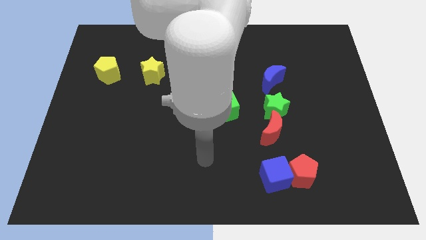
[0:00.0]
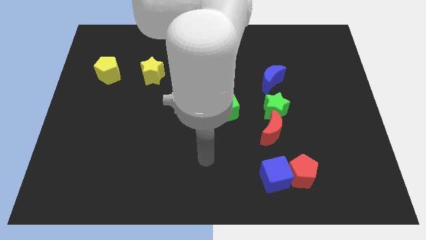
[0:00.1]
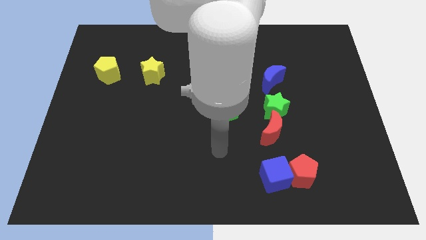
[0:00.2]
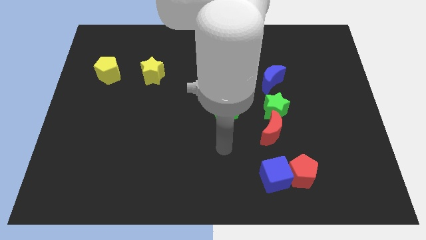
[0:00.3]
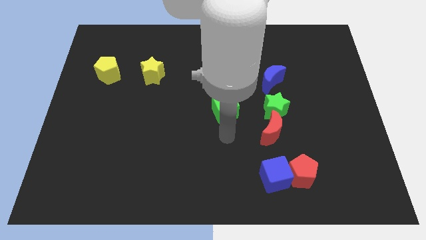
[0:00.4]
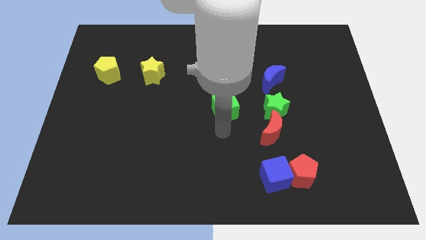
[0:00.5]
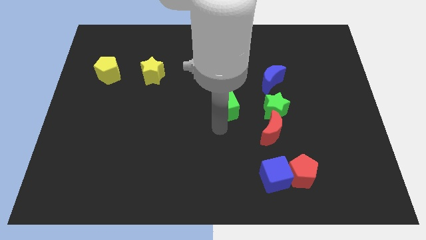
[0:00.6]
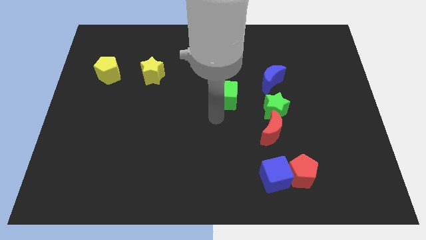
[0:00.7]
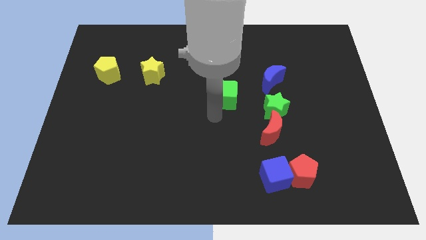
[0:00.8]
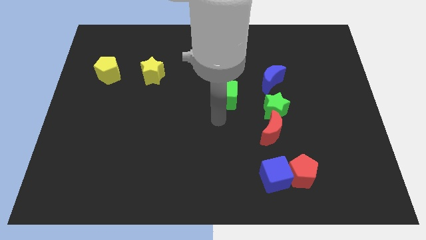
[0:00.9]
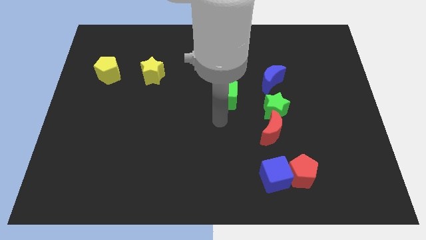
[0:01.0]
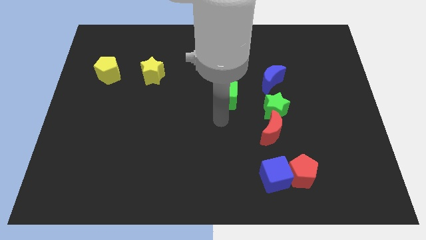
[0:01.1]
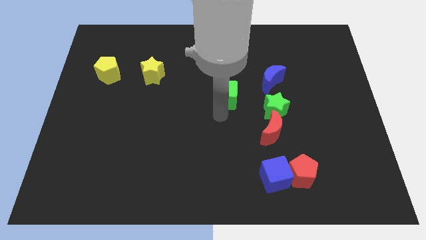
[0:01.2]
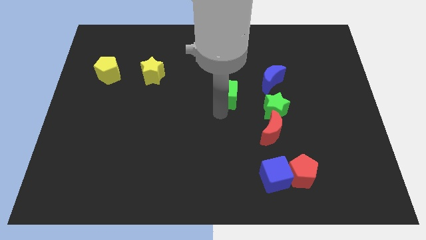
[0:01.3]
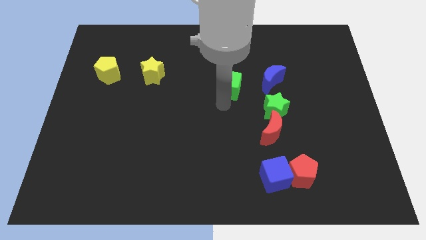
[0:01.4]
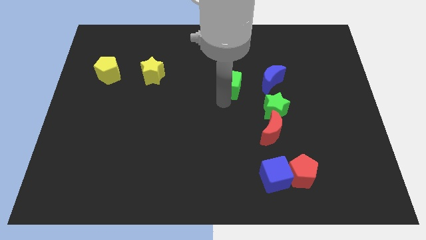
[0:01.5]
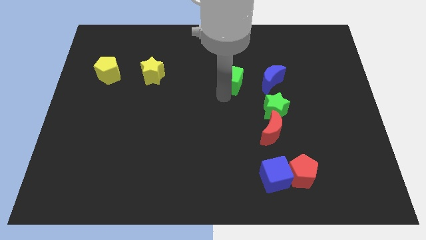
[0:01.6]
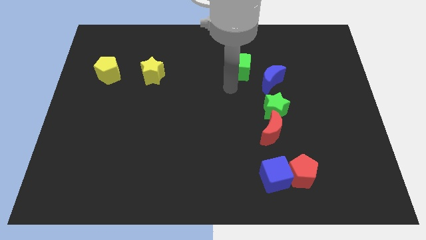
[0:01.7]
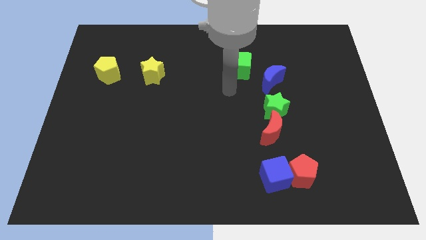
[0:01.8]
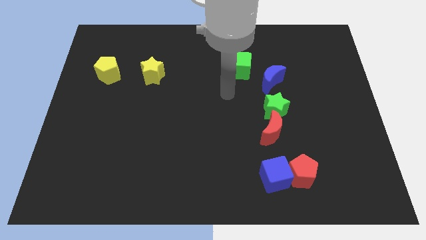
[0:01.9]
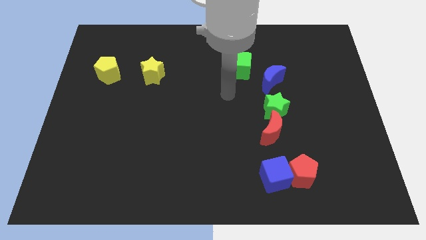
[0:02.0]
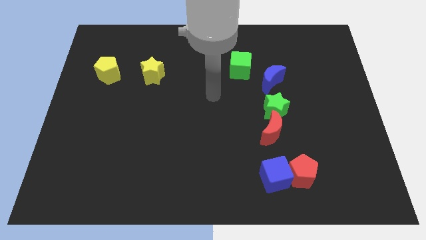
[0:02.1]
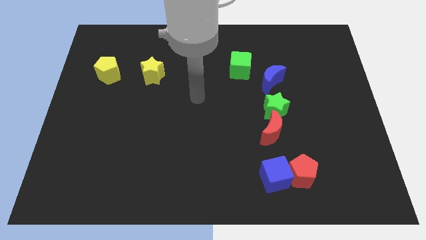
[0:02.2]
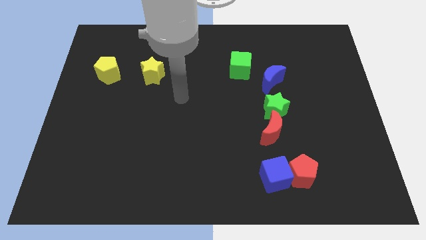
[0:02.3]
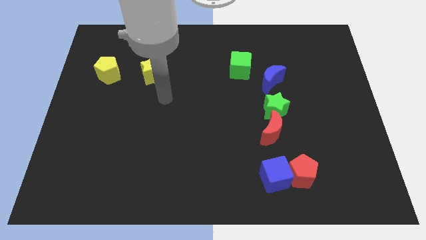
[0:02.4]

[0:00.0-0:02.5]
move green cube slightly up

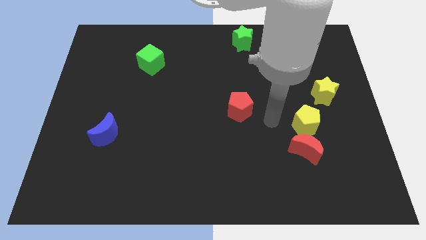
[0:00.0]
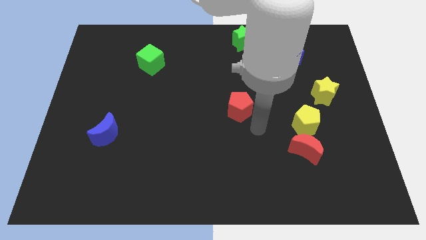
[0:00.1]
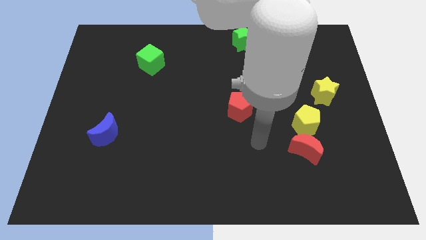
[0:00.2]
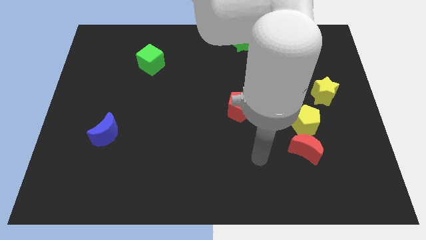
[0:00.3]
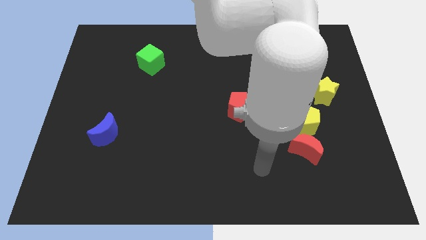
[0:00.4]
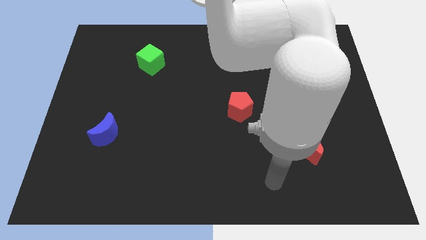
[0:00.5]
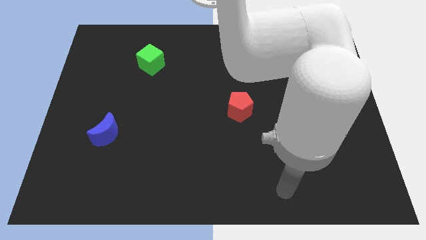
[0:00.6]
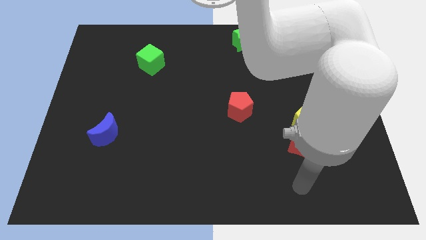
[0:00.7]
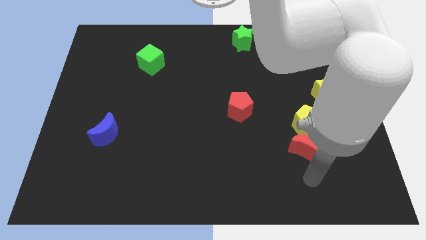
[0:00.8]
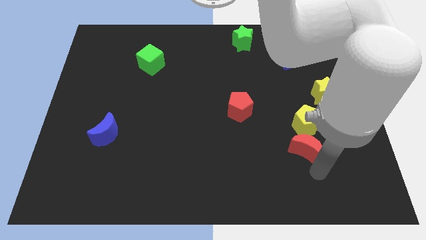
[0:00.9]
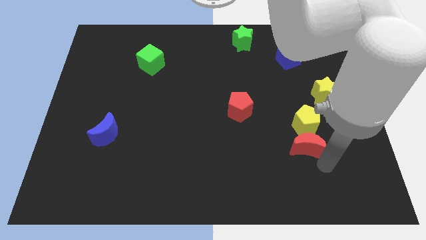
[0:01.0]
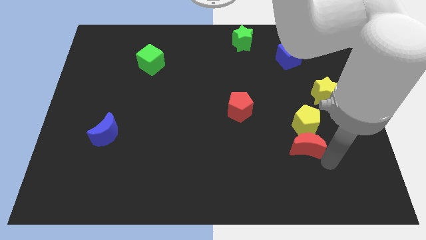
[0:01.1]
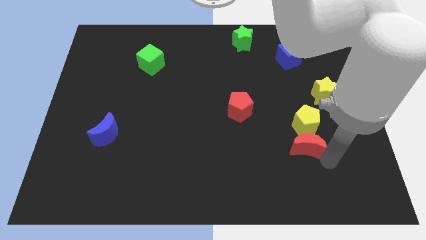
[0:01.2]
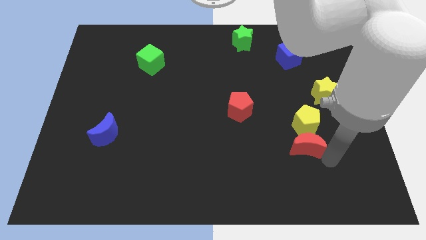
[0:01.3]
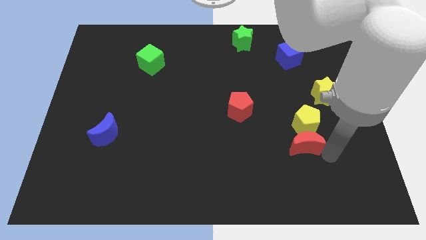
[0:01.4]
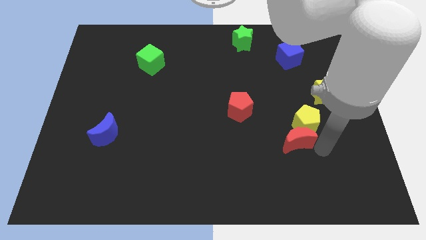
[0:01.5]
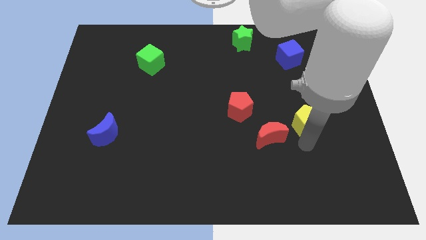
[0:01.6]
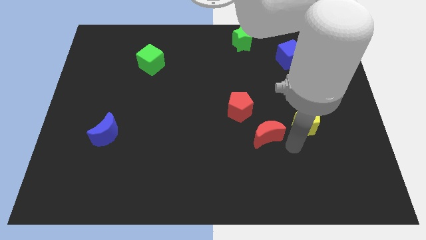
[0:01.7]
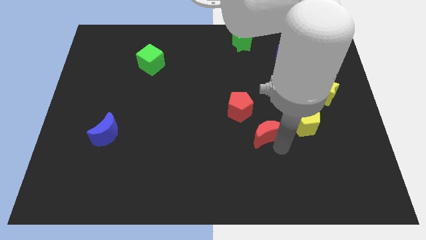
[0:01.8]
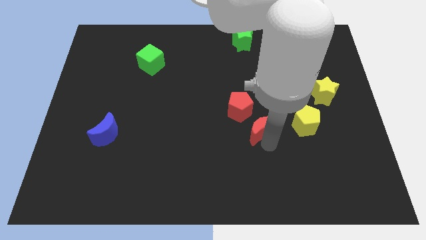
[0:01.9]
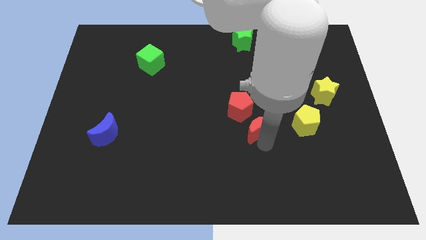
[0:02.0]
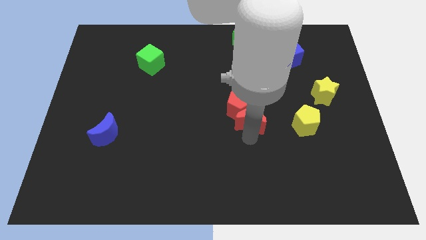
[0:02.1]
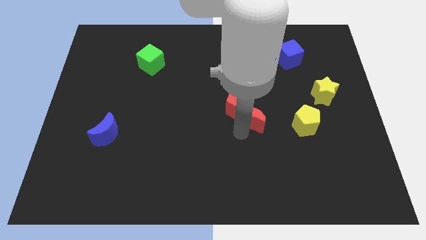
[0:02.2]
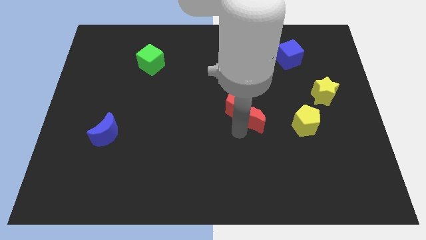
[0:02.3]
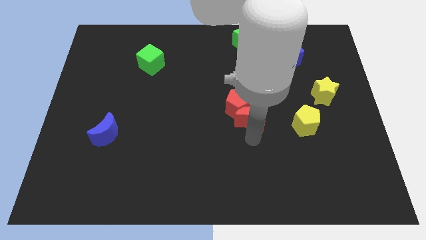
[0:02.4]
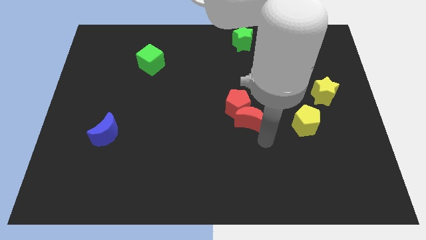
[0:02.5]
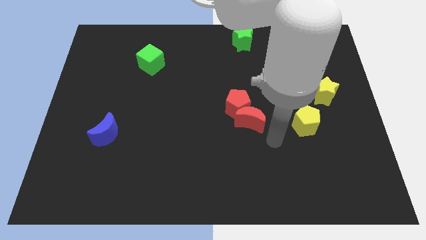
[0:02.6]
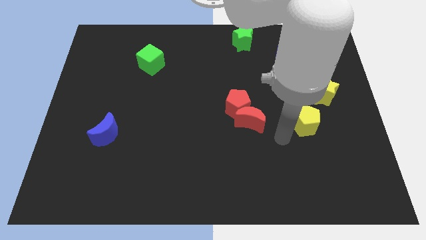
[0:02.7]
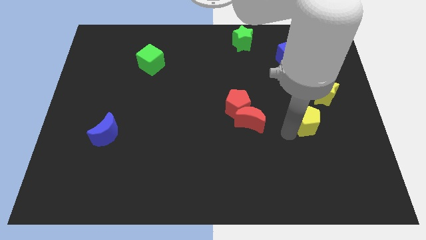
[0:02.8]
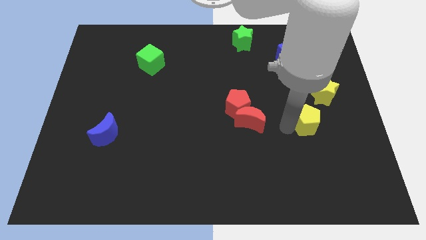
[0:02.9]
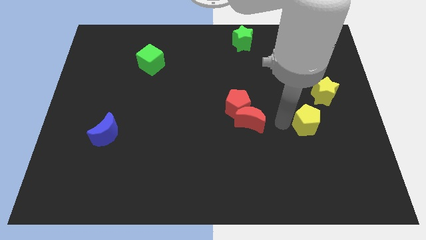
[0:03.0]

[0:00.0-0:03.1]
place red moon below the red pentagon

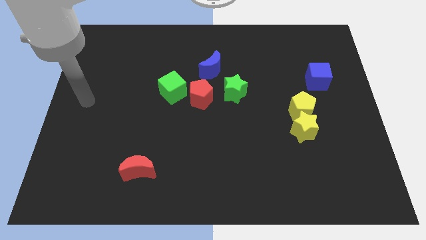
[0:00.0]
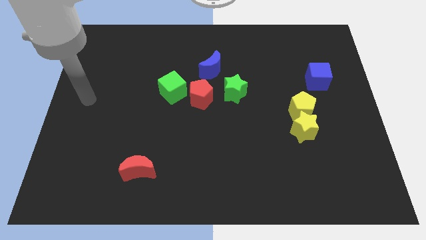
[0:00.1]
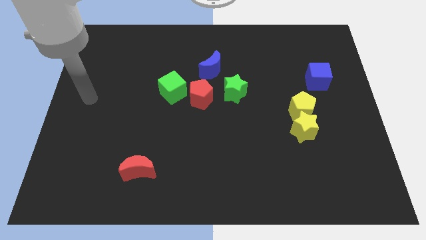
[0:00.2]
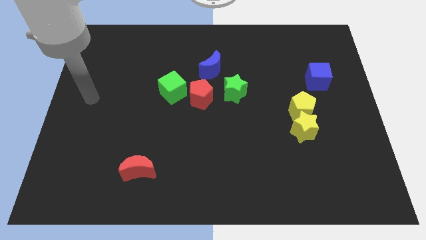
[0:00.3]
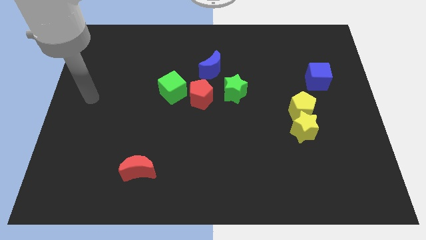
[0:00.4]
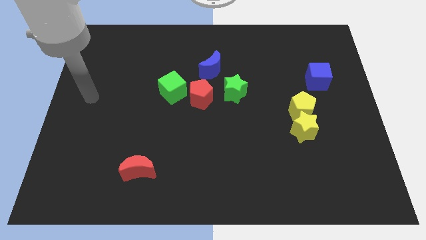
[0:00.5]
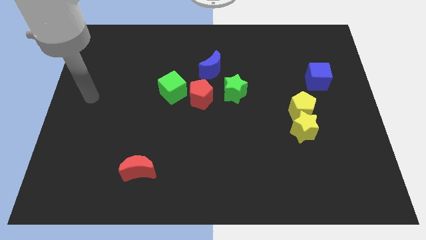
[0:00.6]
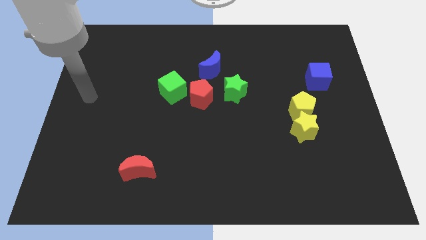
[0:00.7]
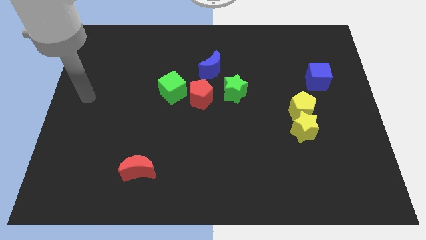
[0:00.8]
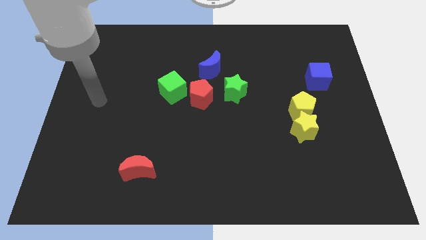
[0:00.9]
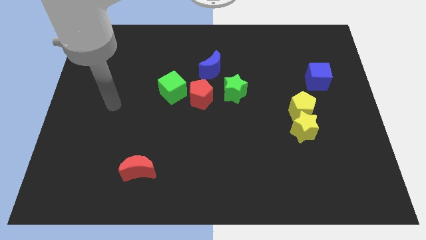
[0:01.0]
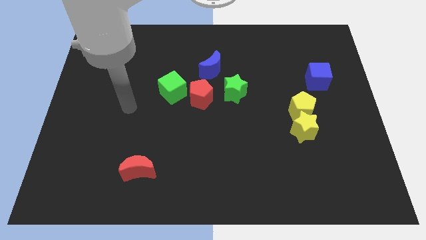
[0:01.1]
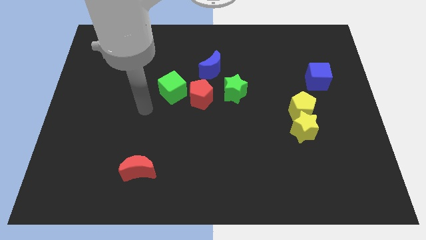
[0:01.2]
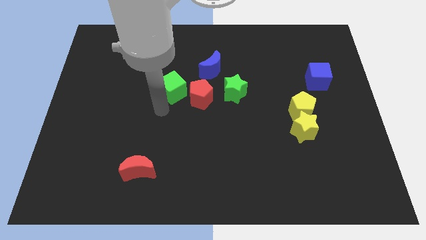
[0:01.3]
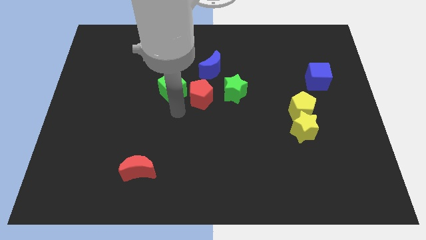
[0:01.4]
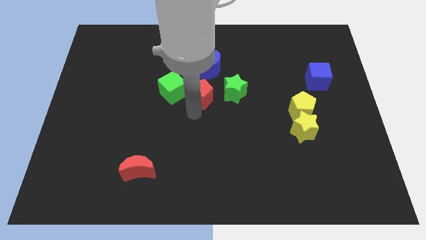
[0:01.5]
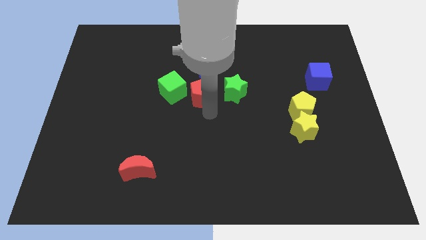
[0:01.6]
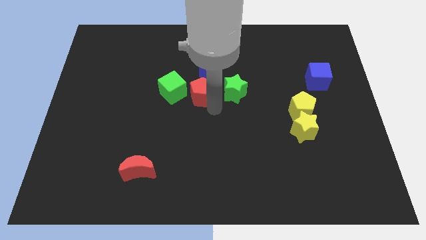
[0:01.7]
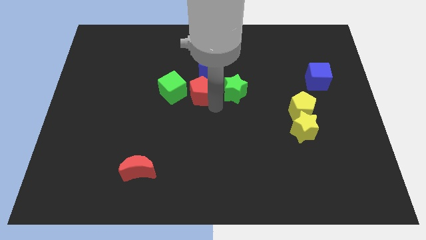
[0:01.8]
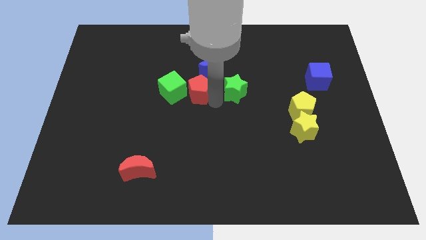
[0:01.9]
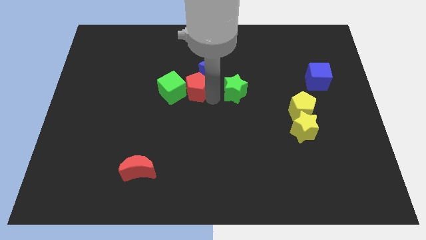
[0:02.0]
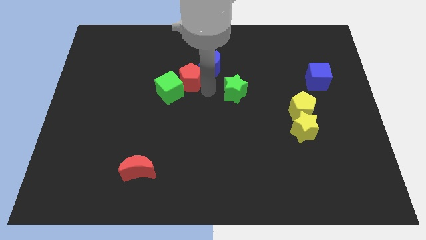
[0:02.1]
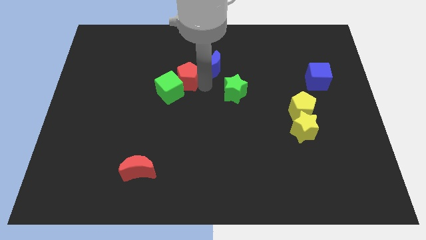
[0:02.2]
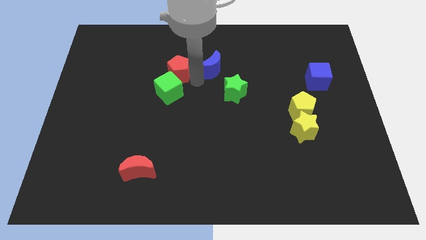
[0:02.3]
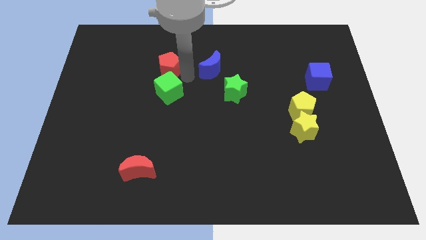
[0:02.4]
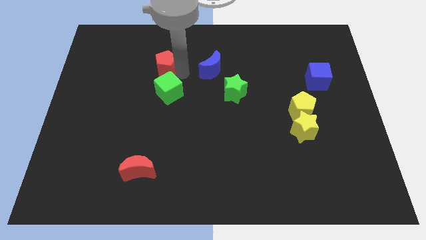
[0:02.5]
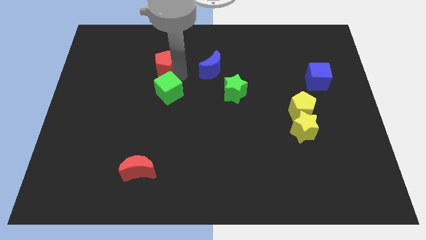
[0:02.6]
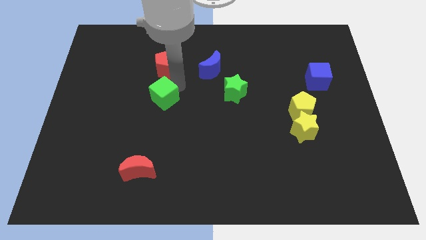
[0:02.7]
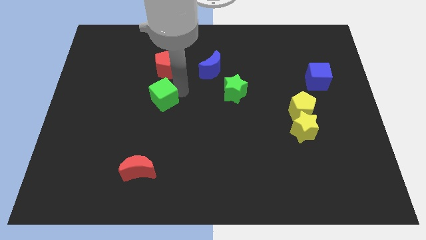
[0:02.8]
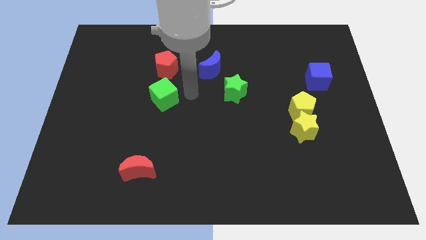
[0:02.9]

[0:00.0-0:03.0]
move the red pentagon to the top of the green cube

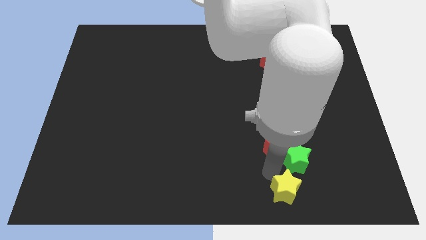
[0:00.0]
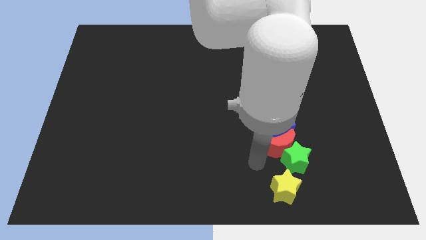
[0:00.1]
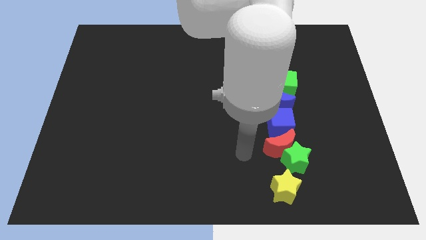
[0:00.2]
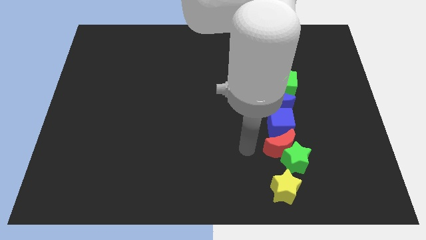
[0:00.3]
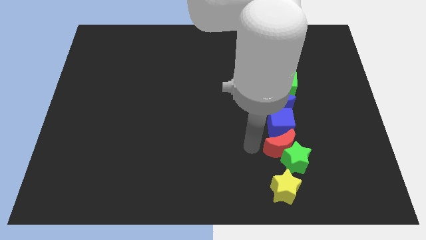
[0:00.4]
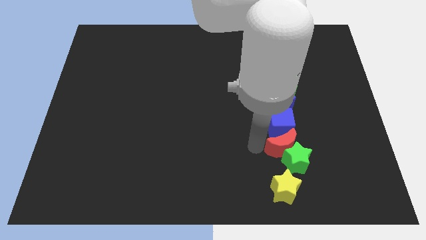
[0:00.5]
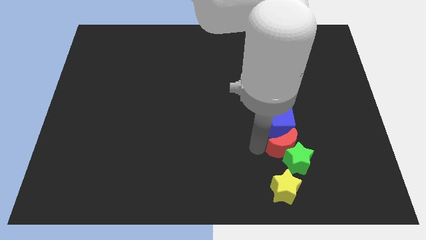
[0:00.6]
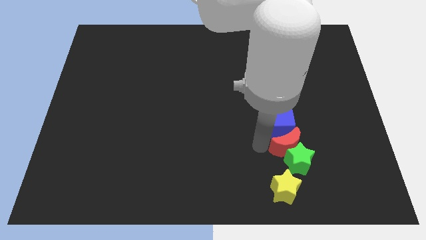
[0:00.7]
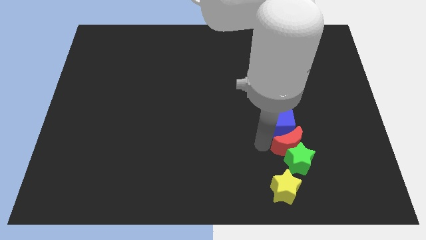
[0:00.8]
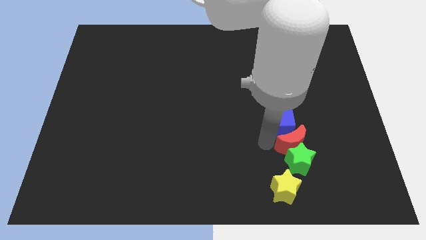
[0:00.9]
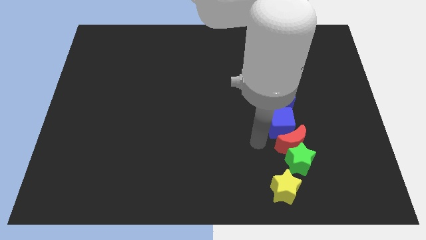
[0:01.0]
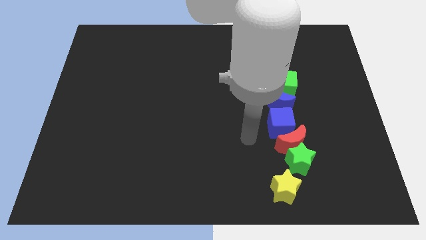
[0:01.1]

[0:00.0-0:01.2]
adjust the yellow star and red moon to form a vertical line
